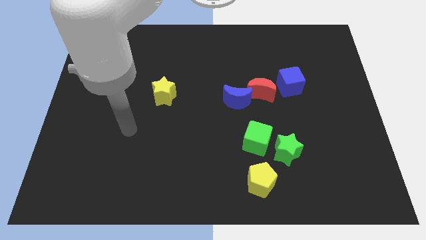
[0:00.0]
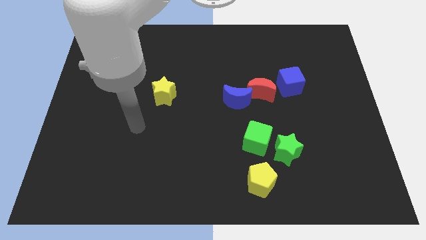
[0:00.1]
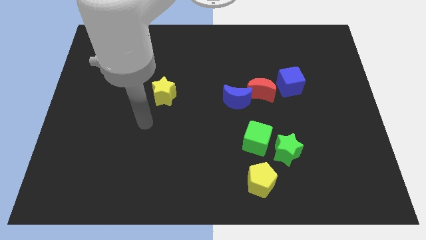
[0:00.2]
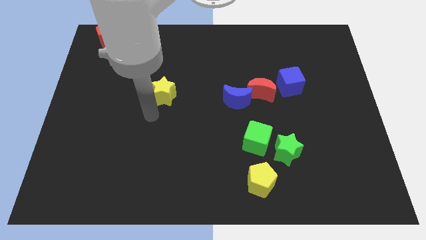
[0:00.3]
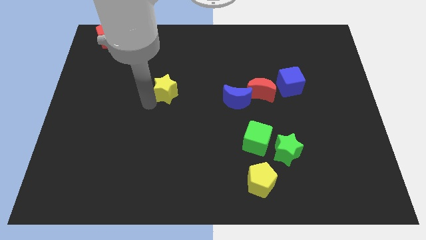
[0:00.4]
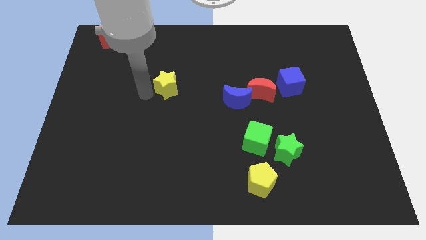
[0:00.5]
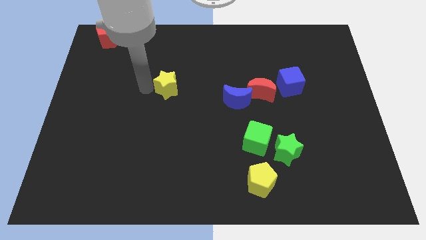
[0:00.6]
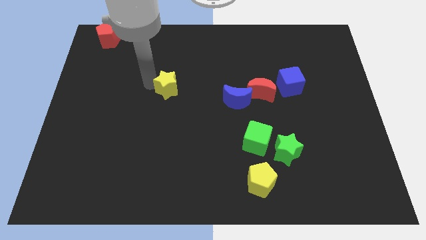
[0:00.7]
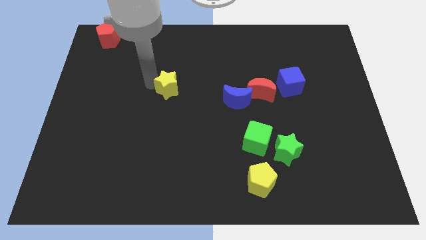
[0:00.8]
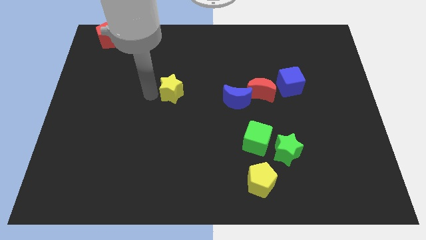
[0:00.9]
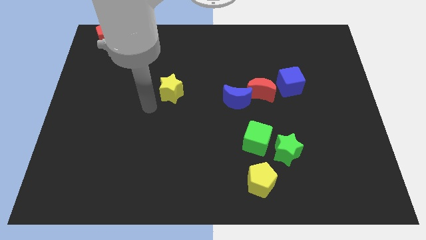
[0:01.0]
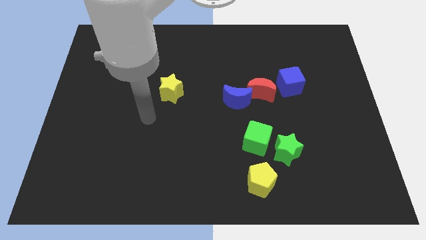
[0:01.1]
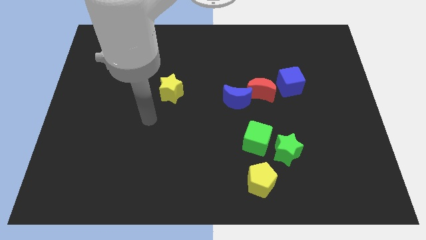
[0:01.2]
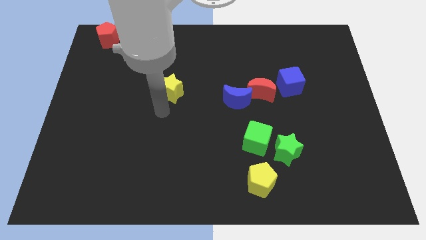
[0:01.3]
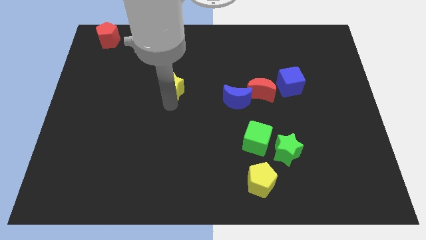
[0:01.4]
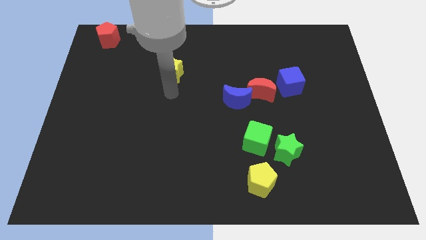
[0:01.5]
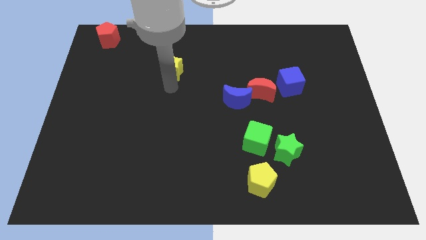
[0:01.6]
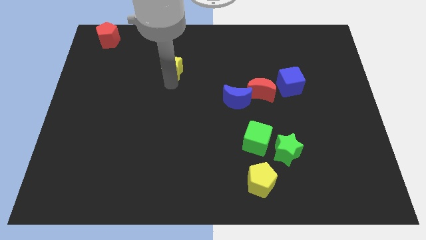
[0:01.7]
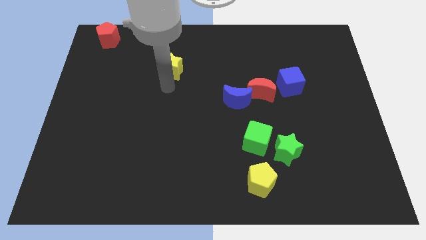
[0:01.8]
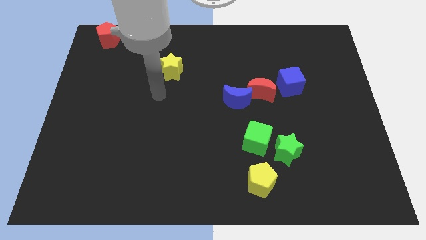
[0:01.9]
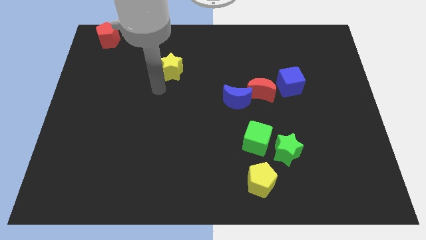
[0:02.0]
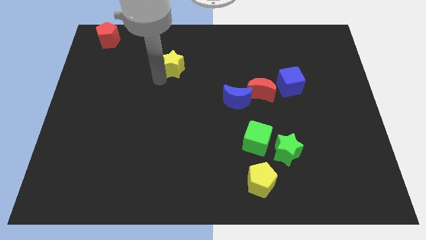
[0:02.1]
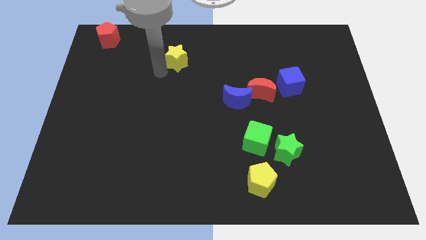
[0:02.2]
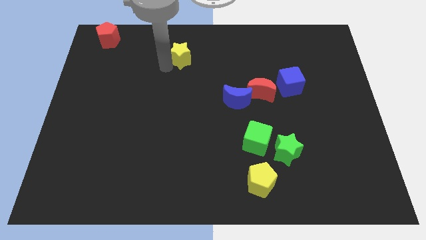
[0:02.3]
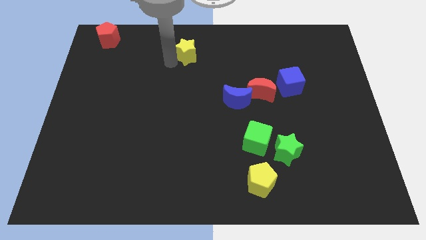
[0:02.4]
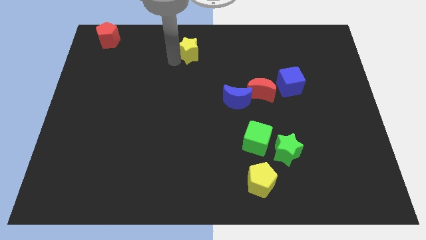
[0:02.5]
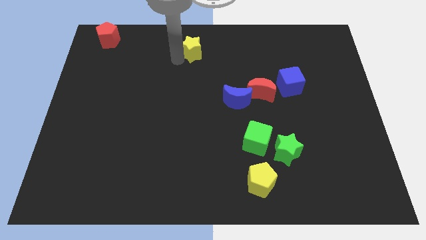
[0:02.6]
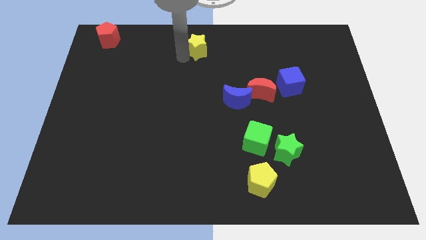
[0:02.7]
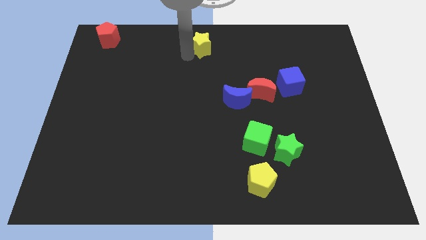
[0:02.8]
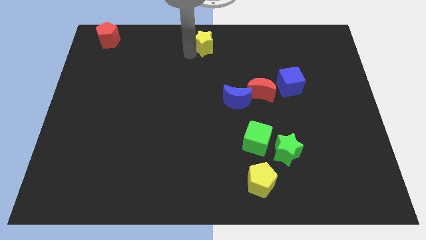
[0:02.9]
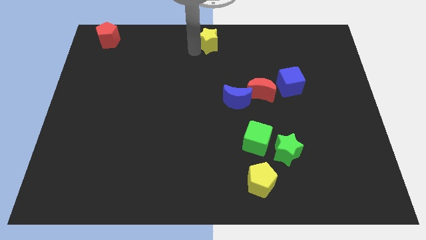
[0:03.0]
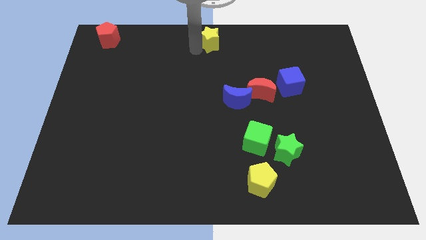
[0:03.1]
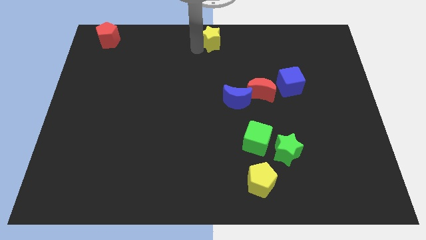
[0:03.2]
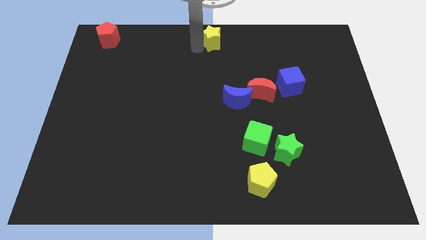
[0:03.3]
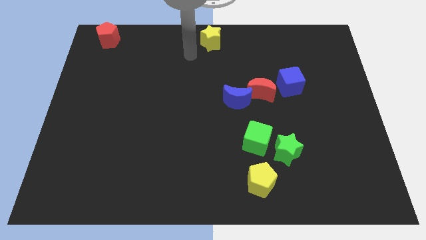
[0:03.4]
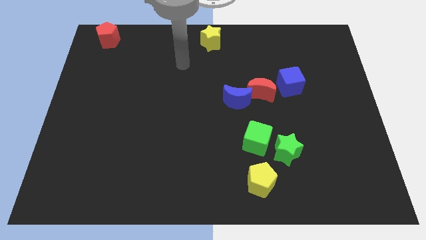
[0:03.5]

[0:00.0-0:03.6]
move yellow star to center top

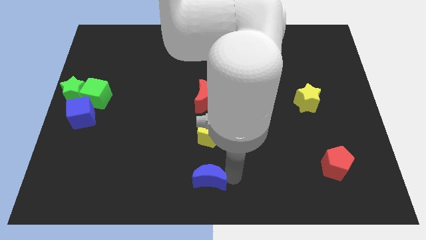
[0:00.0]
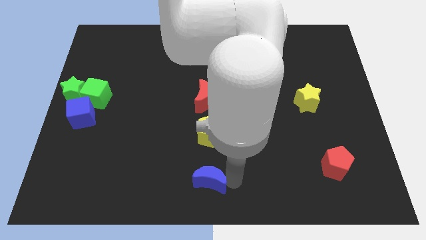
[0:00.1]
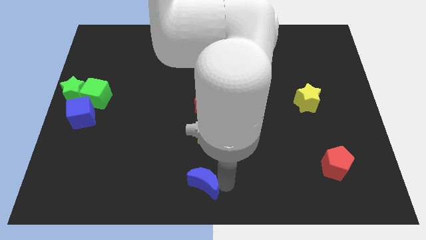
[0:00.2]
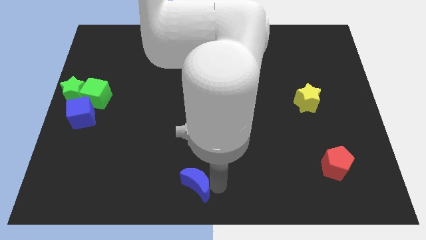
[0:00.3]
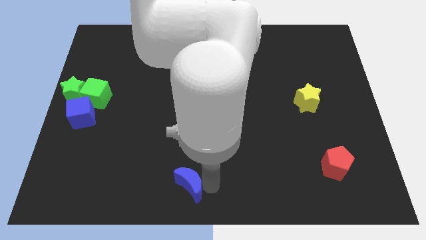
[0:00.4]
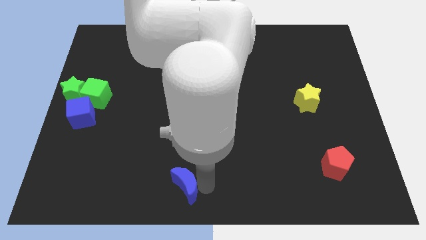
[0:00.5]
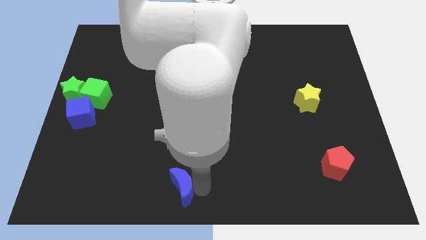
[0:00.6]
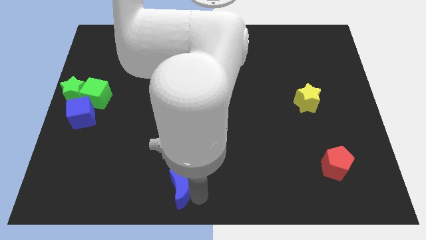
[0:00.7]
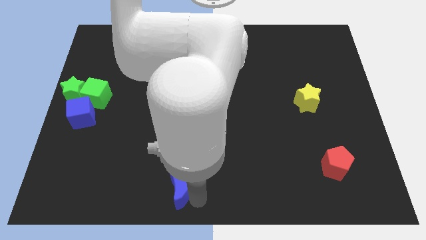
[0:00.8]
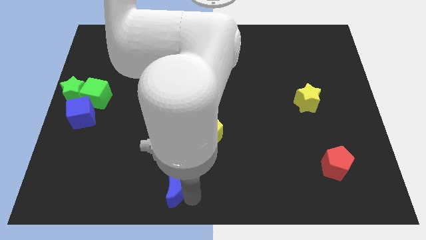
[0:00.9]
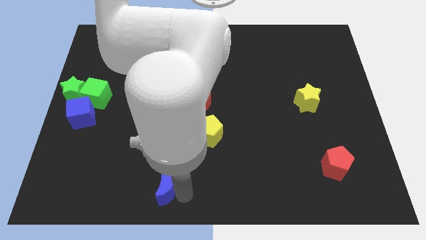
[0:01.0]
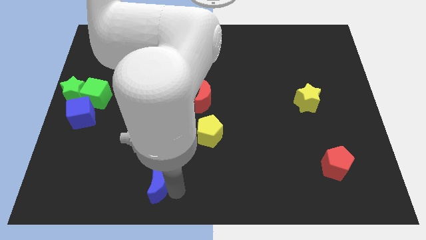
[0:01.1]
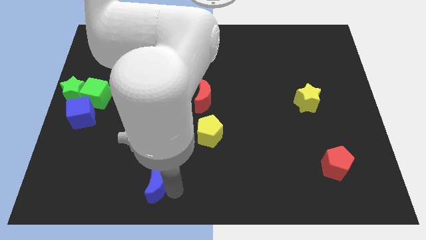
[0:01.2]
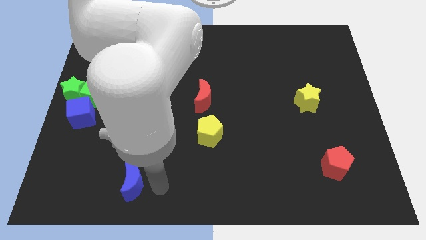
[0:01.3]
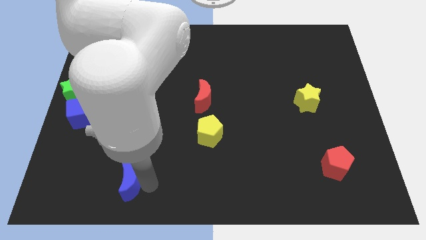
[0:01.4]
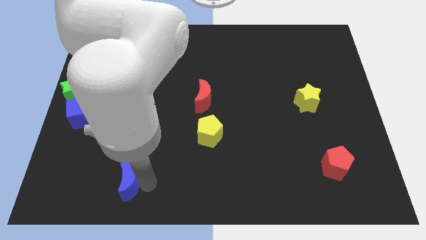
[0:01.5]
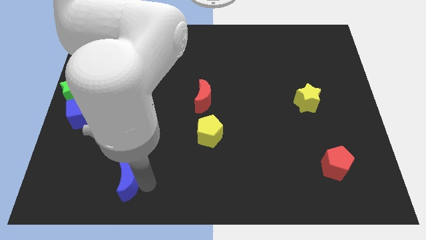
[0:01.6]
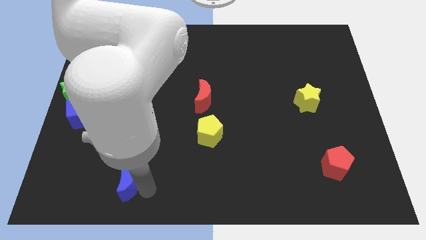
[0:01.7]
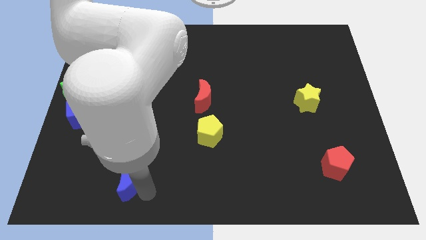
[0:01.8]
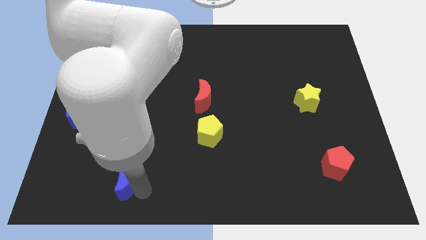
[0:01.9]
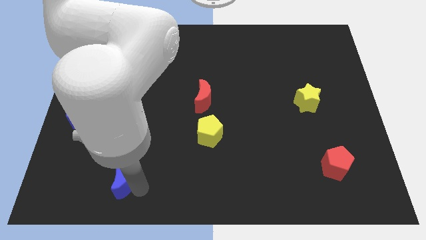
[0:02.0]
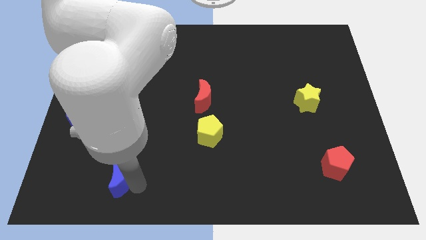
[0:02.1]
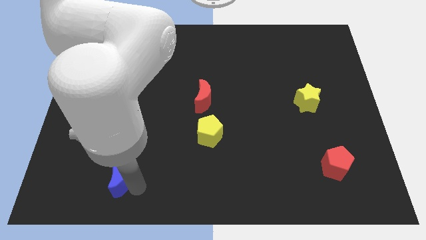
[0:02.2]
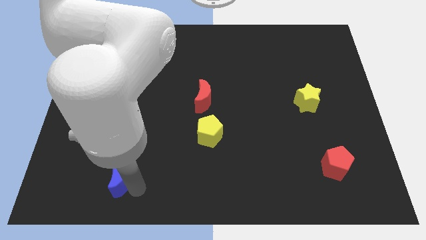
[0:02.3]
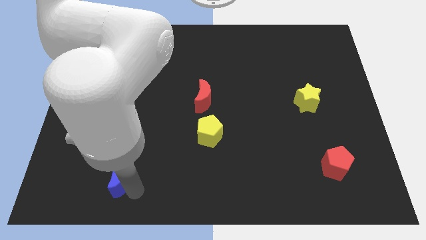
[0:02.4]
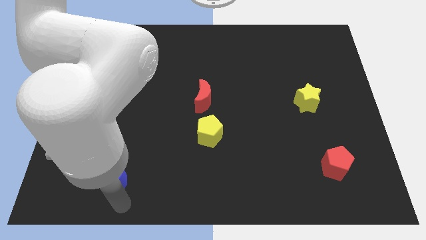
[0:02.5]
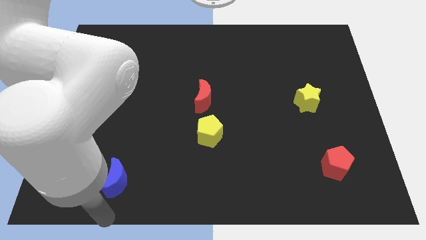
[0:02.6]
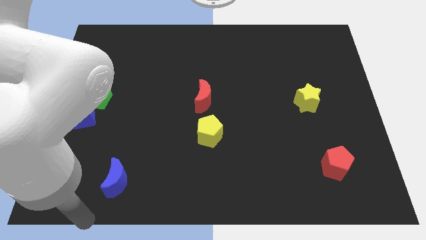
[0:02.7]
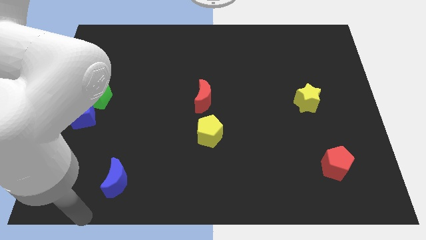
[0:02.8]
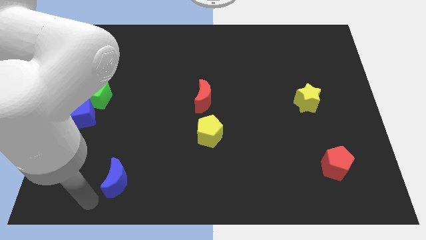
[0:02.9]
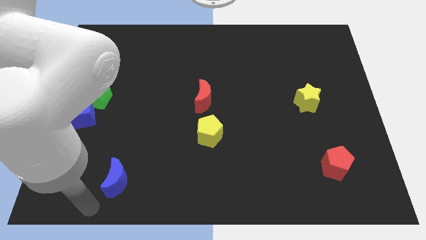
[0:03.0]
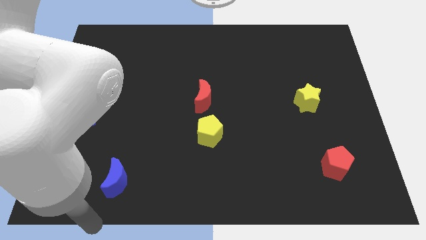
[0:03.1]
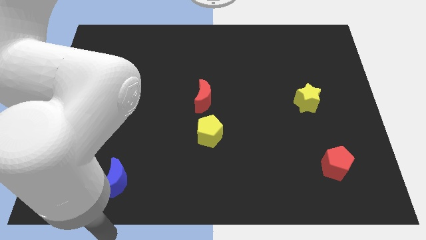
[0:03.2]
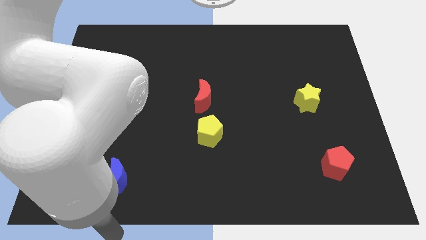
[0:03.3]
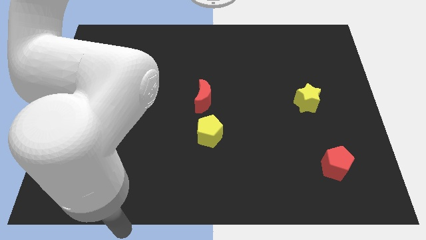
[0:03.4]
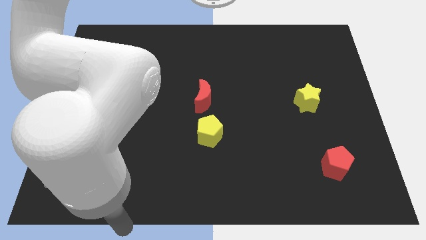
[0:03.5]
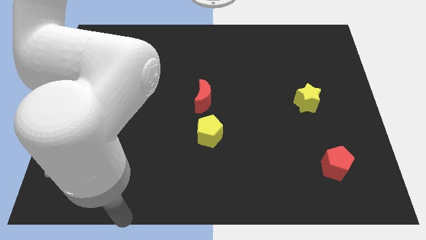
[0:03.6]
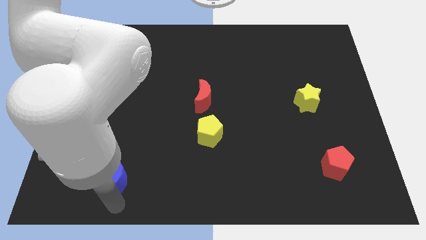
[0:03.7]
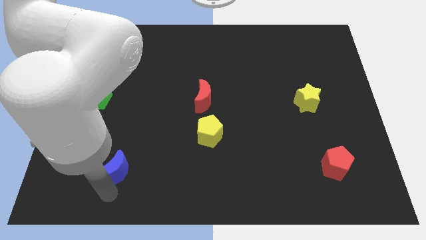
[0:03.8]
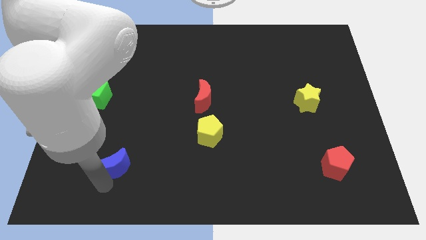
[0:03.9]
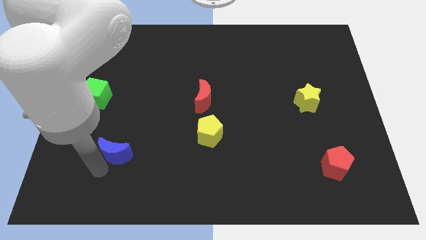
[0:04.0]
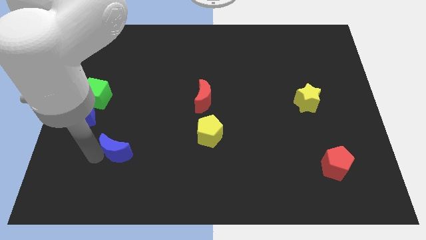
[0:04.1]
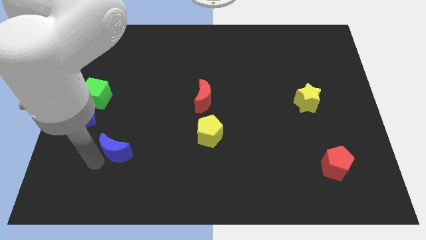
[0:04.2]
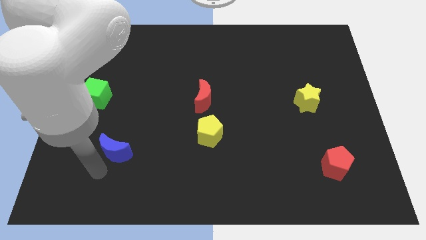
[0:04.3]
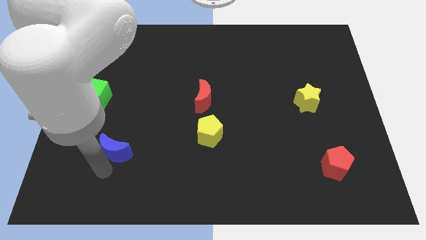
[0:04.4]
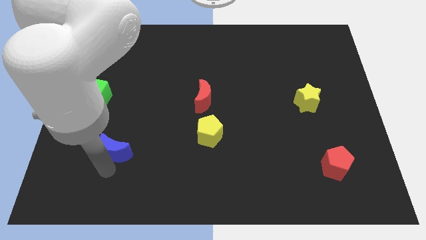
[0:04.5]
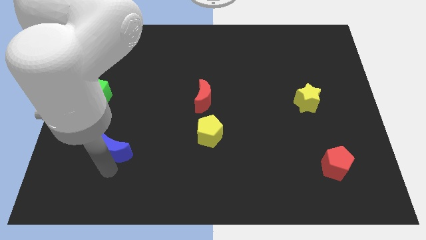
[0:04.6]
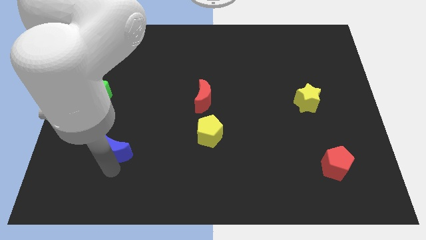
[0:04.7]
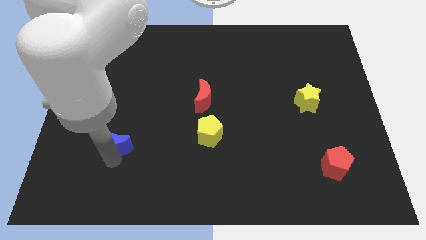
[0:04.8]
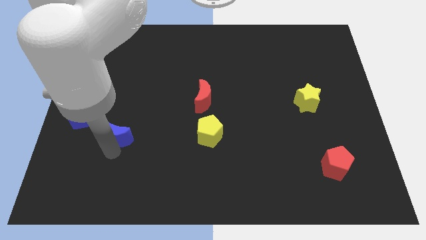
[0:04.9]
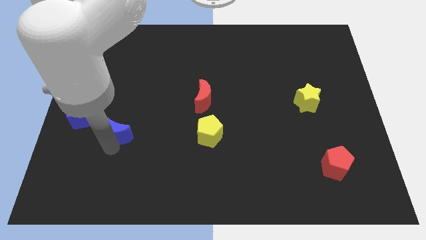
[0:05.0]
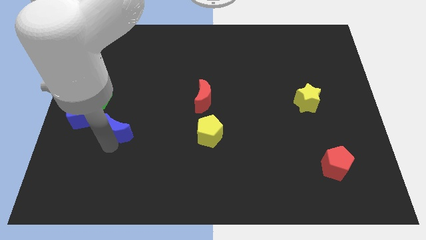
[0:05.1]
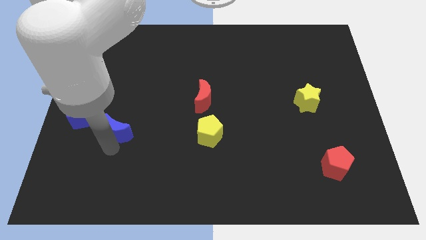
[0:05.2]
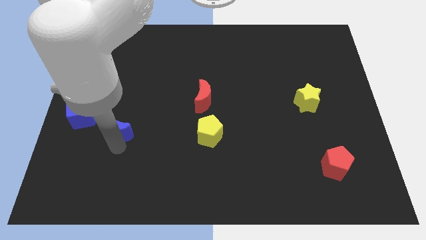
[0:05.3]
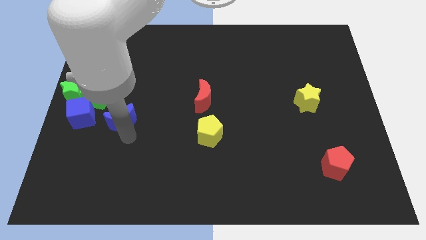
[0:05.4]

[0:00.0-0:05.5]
place blue crescent near to blue cube
